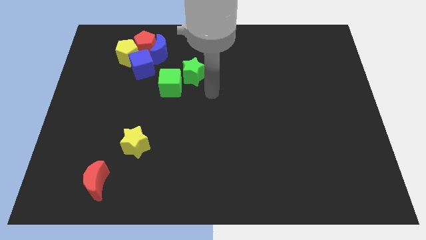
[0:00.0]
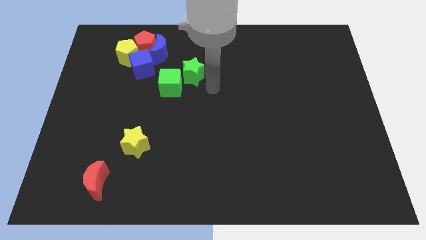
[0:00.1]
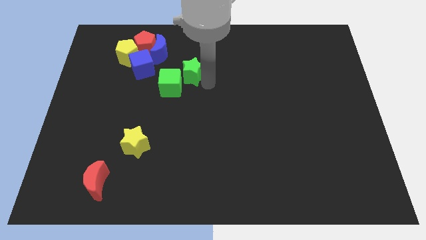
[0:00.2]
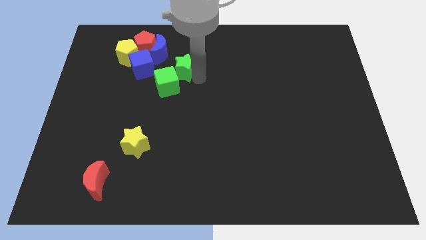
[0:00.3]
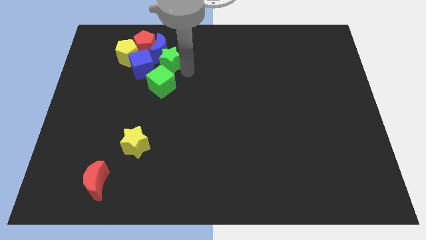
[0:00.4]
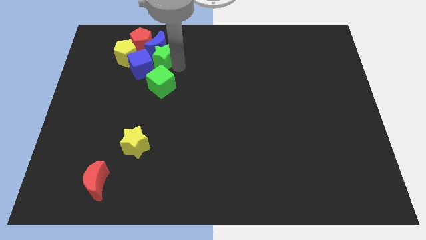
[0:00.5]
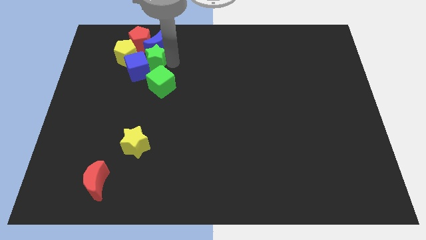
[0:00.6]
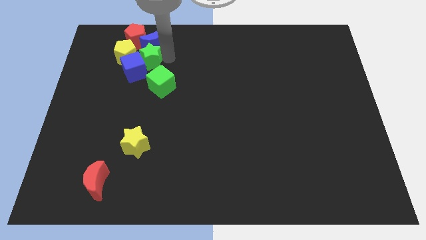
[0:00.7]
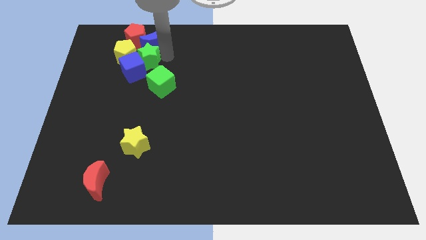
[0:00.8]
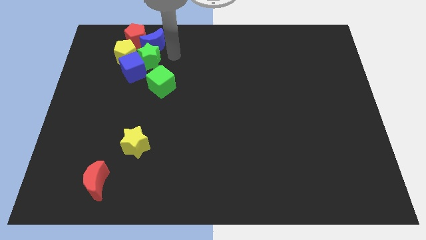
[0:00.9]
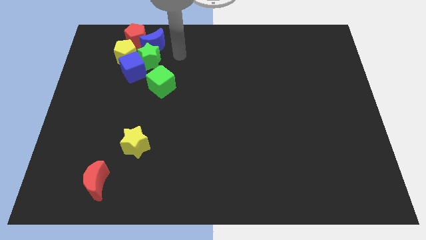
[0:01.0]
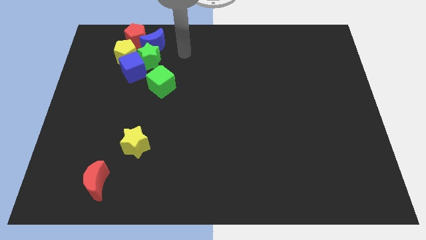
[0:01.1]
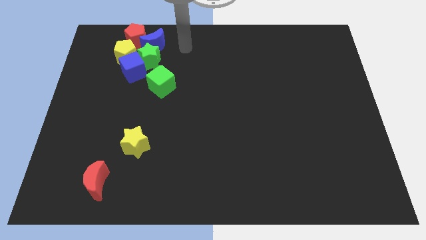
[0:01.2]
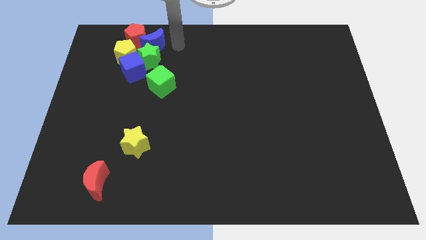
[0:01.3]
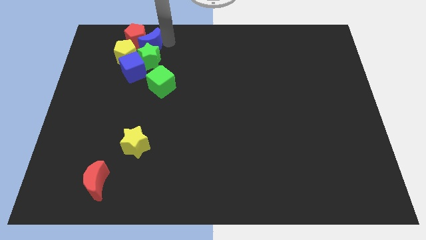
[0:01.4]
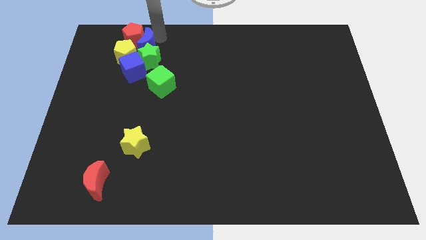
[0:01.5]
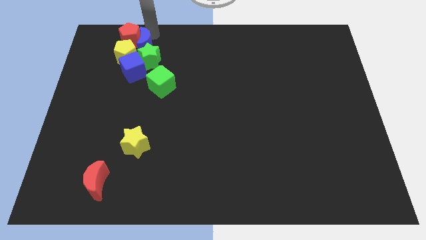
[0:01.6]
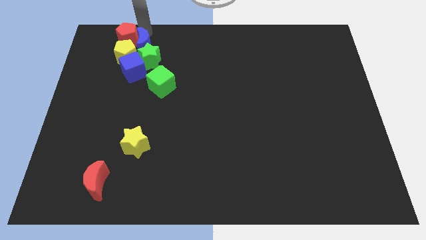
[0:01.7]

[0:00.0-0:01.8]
drag the green star close to the group of blocks

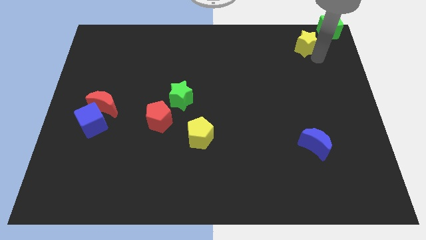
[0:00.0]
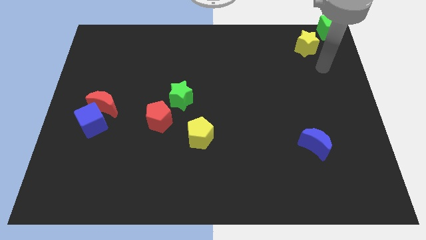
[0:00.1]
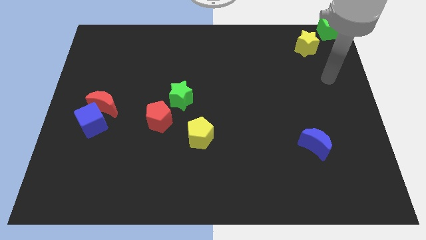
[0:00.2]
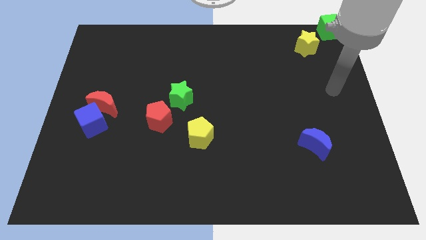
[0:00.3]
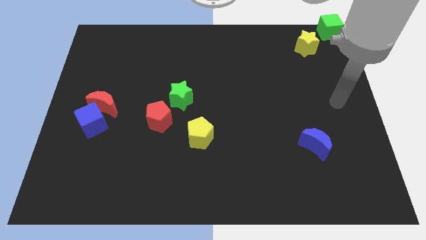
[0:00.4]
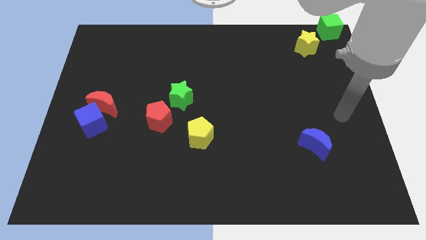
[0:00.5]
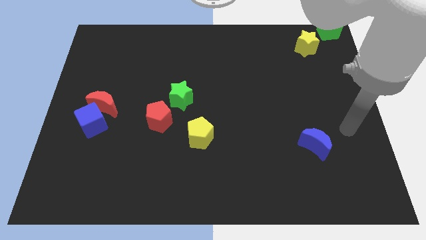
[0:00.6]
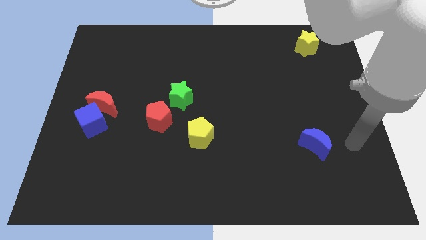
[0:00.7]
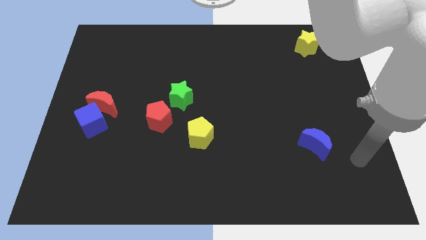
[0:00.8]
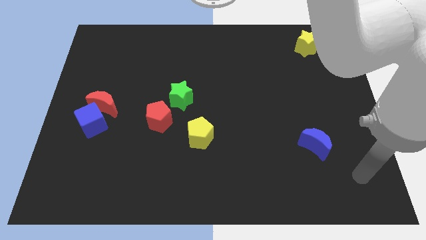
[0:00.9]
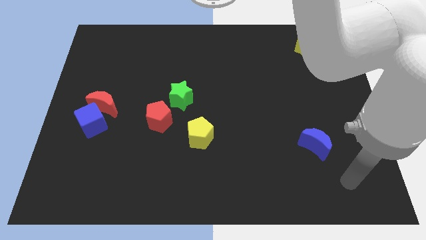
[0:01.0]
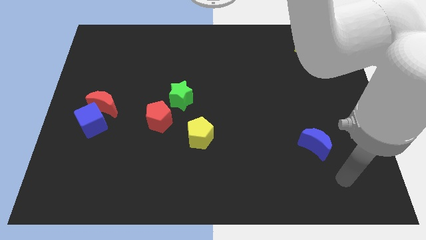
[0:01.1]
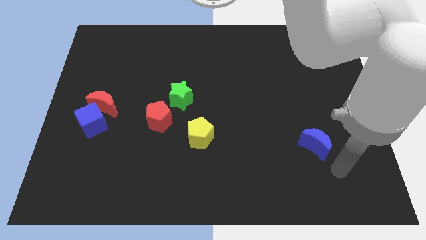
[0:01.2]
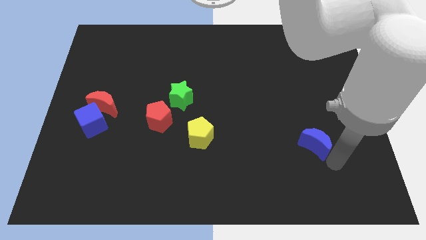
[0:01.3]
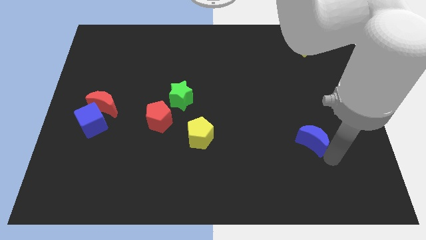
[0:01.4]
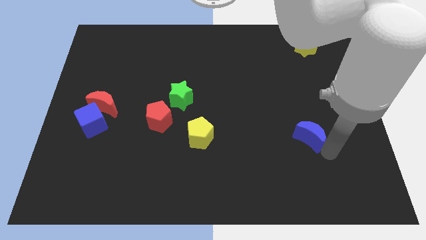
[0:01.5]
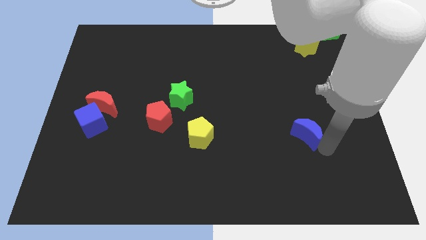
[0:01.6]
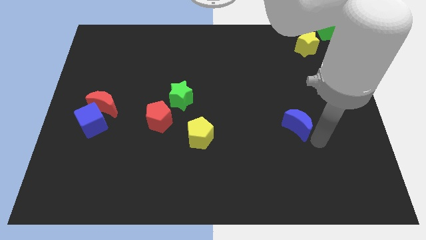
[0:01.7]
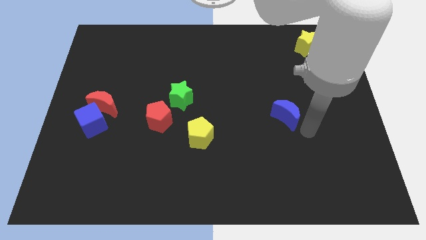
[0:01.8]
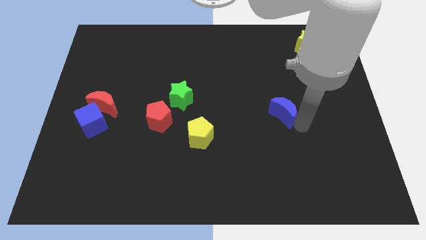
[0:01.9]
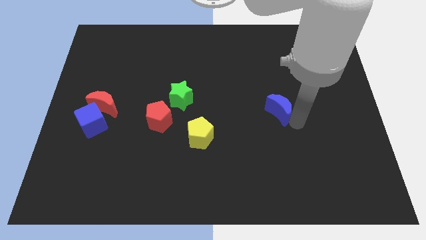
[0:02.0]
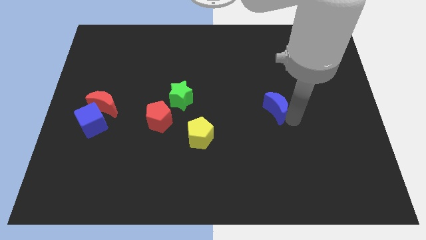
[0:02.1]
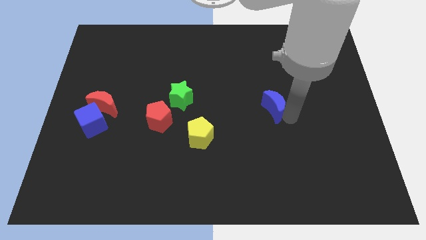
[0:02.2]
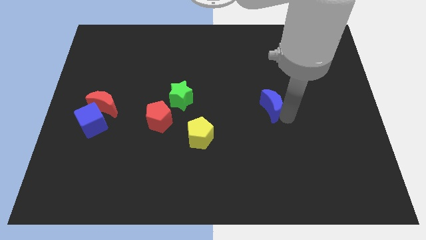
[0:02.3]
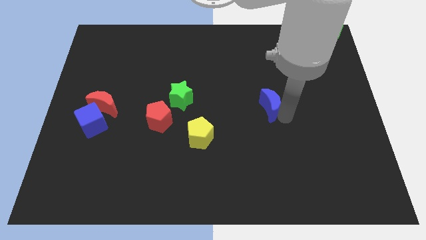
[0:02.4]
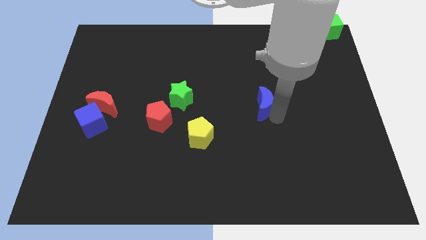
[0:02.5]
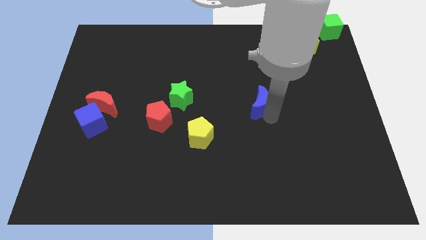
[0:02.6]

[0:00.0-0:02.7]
push the blue crescent parallel to the right of the green star

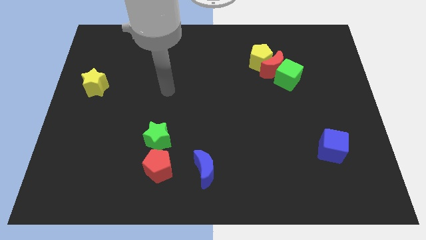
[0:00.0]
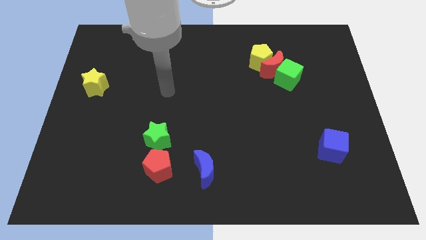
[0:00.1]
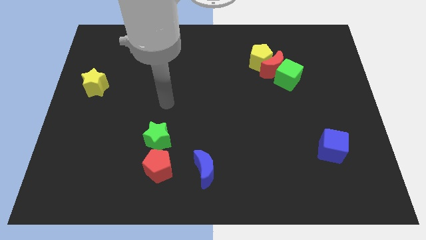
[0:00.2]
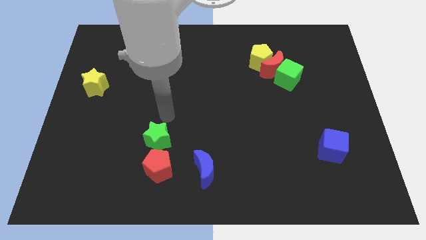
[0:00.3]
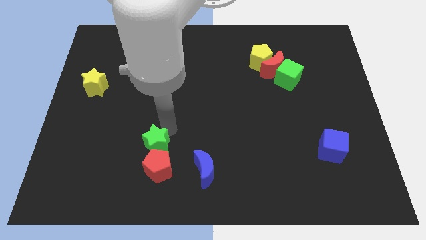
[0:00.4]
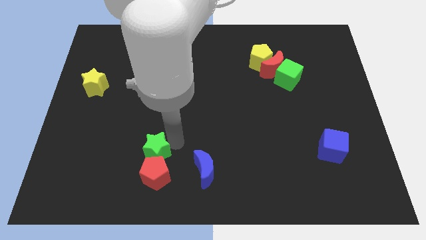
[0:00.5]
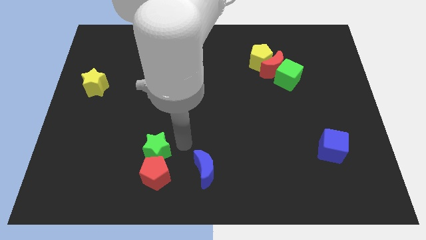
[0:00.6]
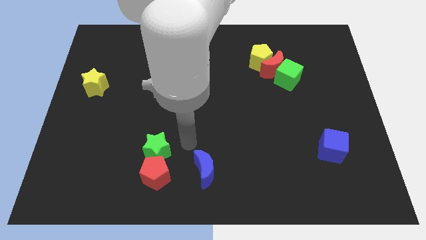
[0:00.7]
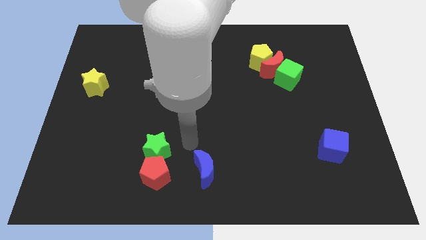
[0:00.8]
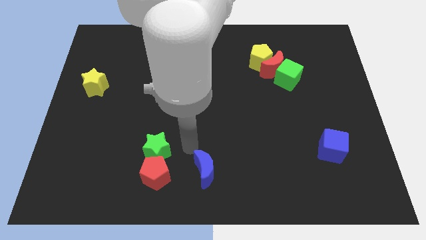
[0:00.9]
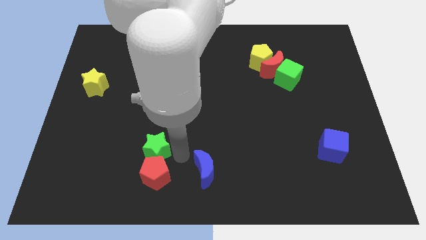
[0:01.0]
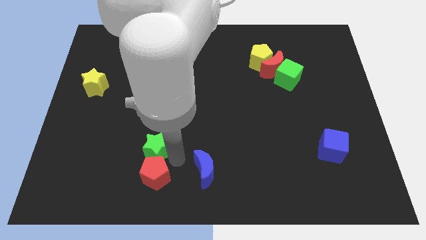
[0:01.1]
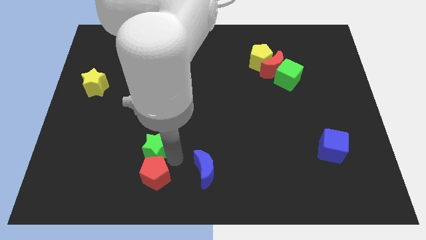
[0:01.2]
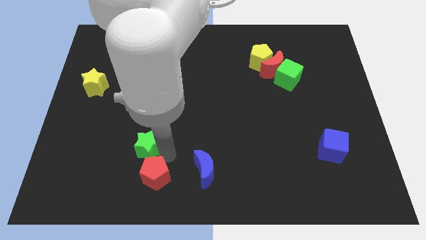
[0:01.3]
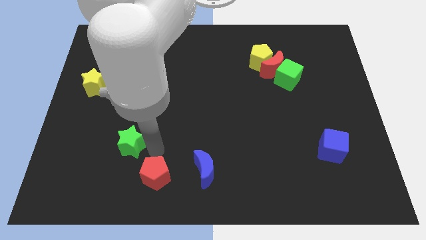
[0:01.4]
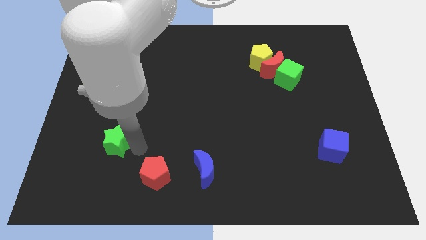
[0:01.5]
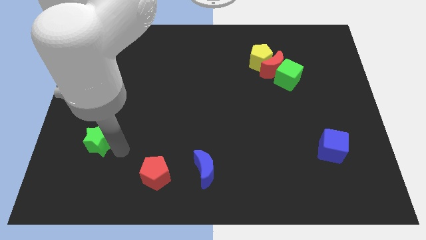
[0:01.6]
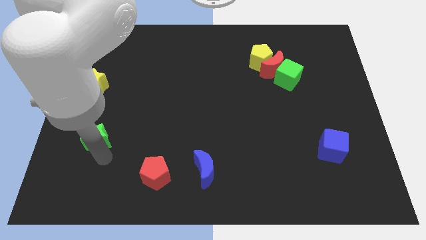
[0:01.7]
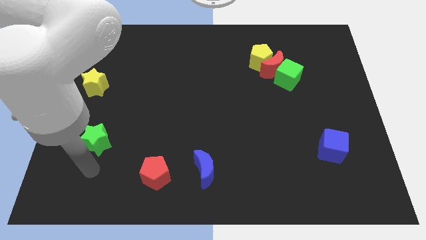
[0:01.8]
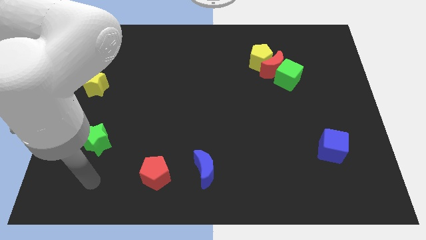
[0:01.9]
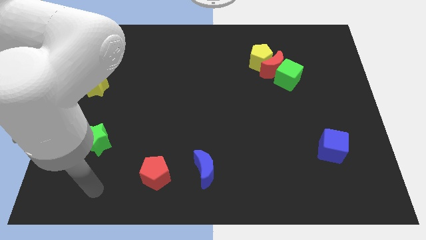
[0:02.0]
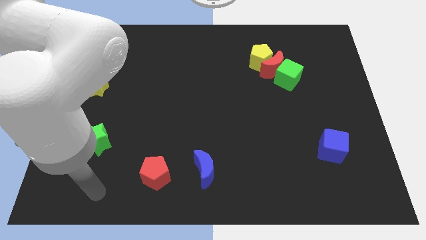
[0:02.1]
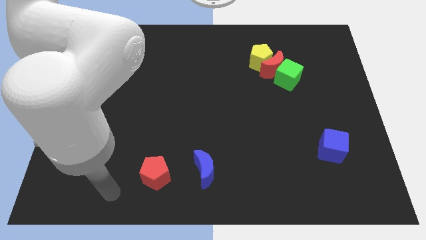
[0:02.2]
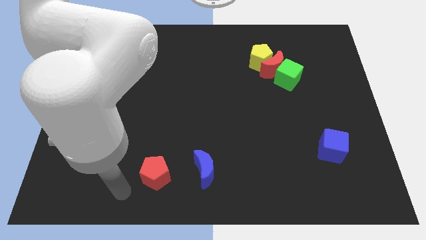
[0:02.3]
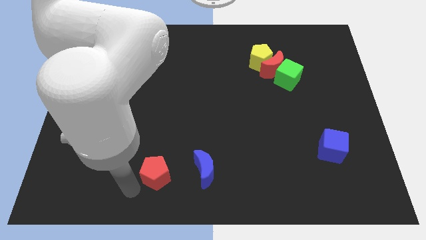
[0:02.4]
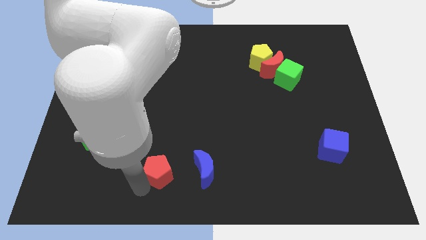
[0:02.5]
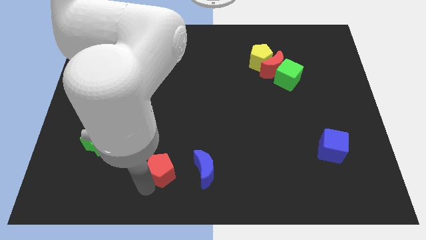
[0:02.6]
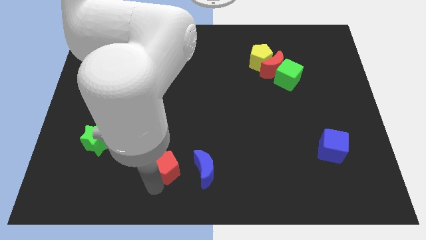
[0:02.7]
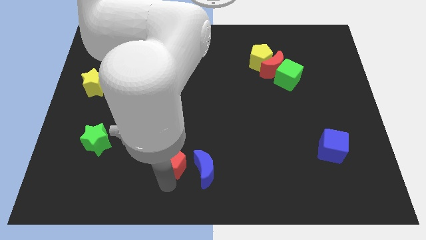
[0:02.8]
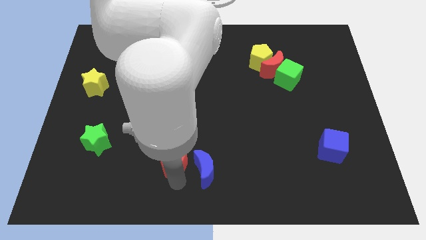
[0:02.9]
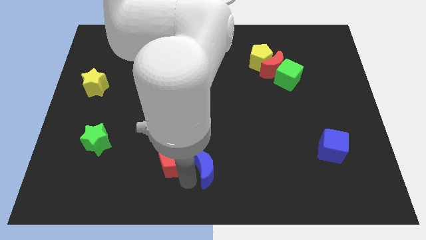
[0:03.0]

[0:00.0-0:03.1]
separate the green star from the red pentagon

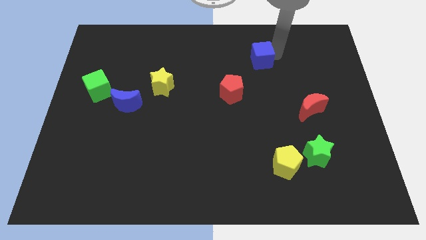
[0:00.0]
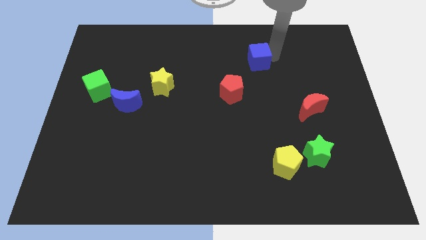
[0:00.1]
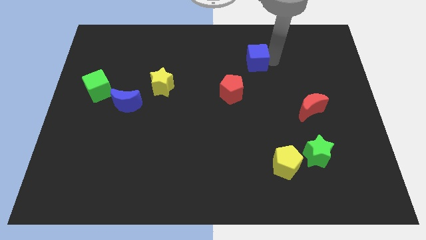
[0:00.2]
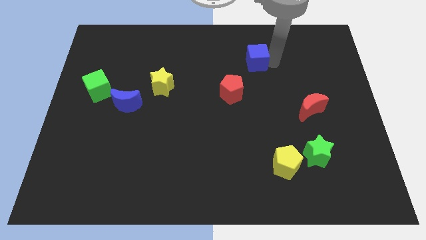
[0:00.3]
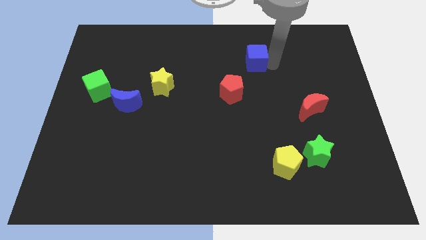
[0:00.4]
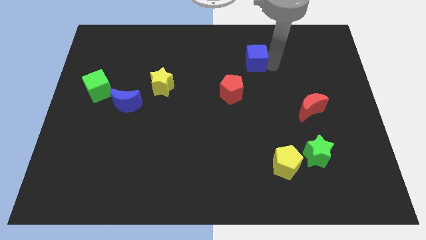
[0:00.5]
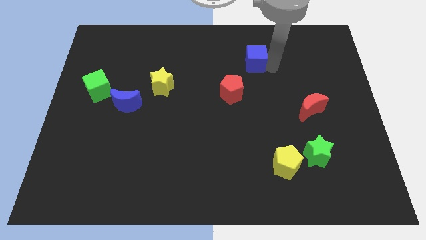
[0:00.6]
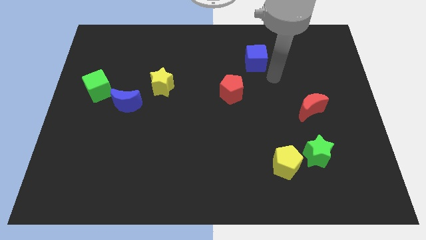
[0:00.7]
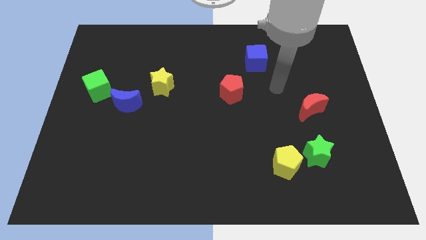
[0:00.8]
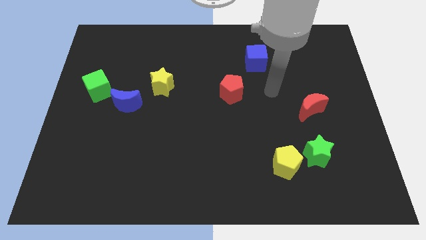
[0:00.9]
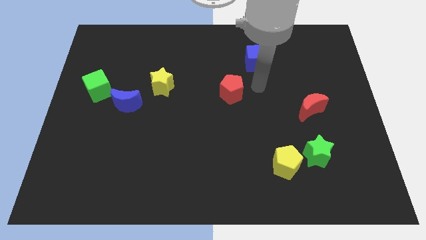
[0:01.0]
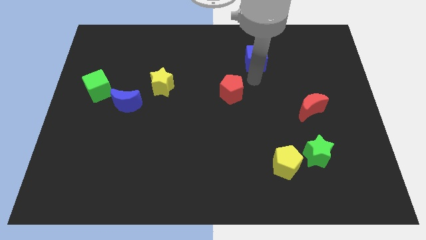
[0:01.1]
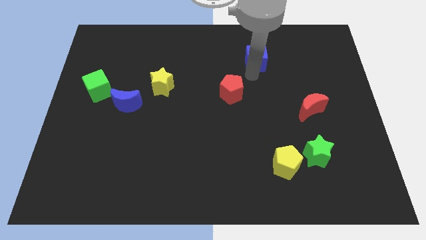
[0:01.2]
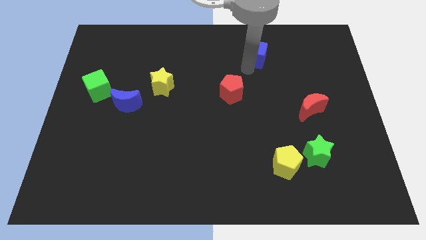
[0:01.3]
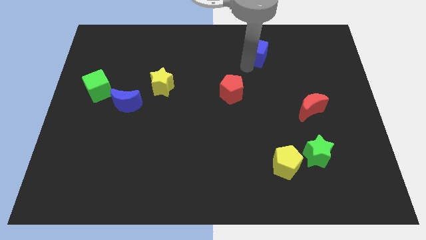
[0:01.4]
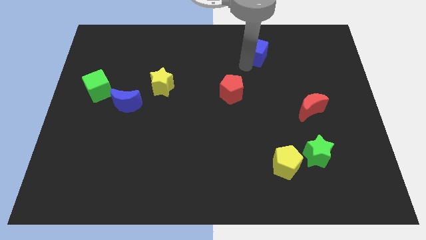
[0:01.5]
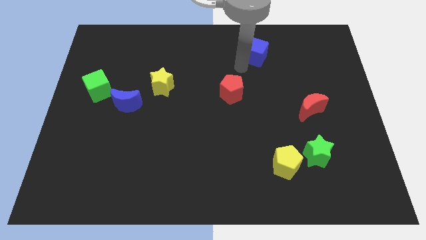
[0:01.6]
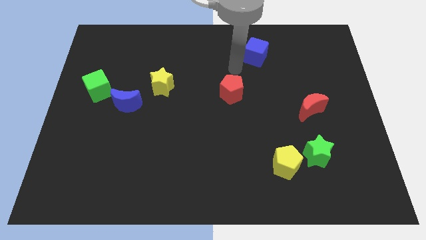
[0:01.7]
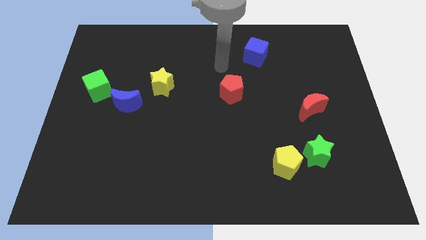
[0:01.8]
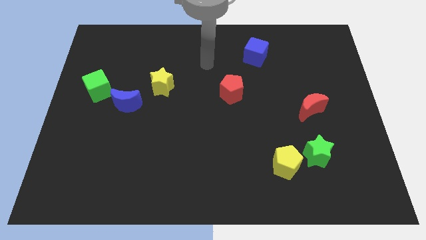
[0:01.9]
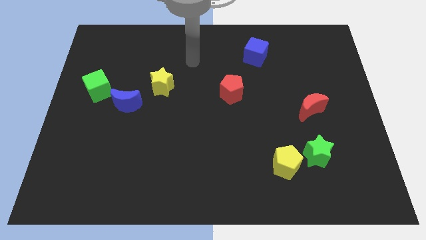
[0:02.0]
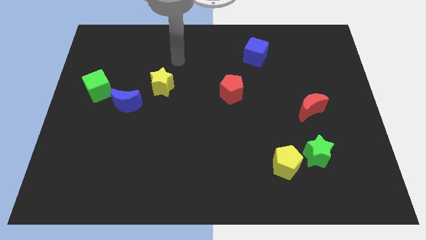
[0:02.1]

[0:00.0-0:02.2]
move red pentagon and blue cube apart
